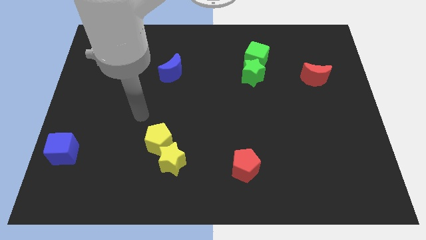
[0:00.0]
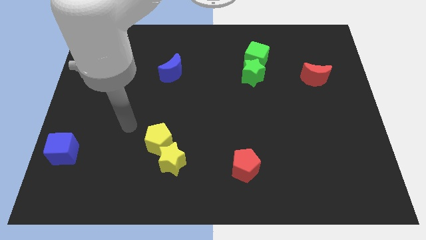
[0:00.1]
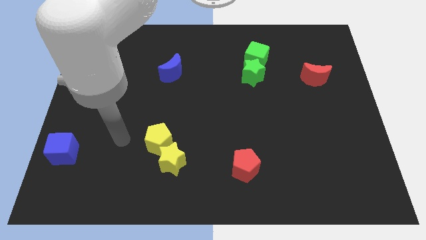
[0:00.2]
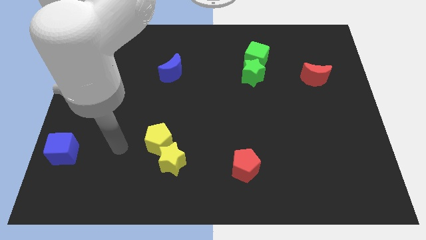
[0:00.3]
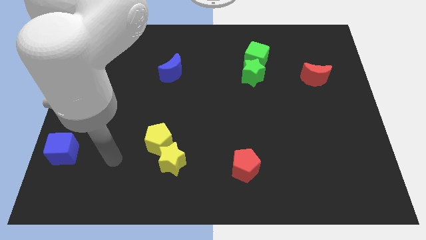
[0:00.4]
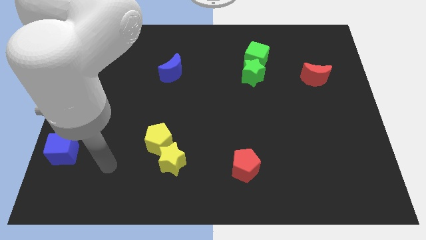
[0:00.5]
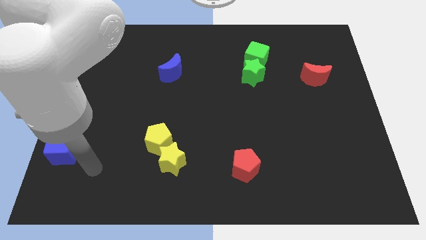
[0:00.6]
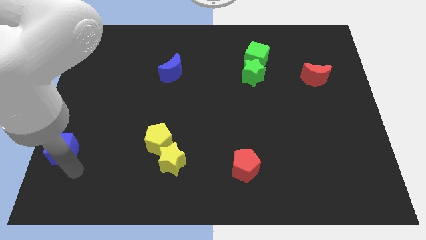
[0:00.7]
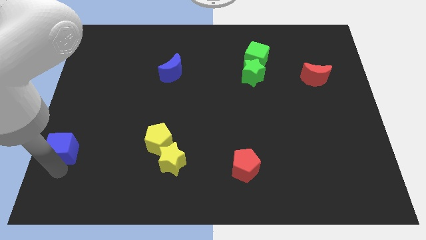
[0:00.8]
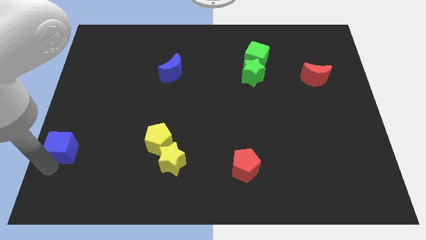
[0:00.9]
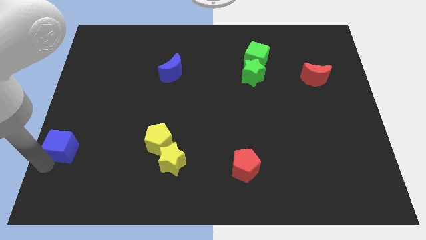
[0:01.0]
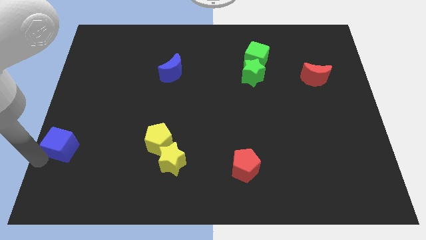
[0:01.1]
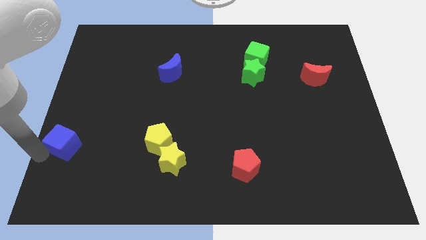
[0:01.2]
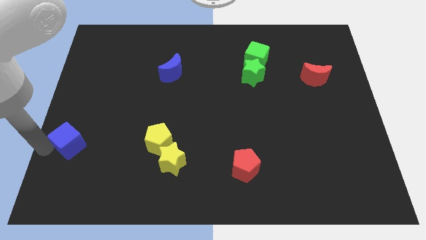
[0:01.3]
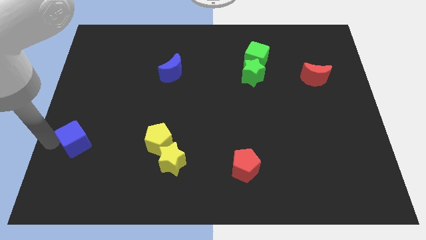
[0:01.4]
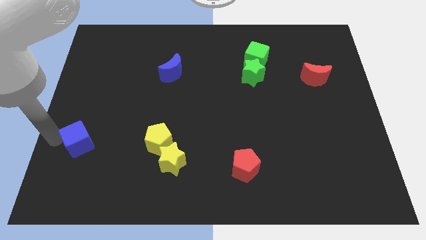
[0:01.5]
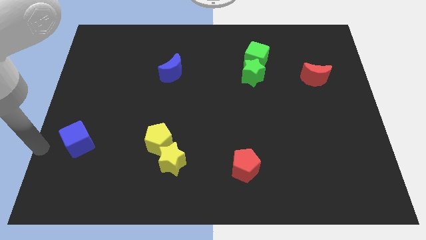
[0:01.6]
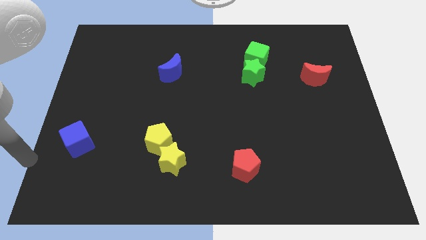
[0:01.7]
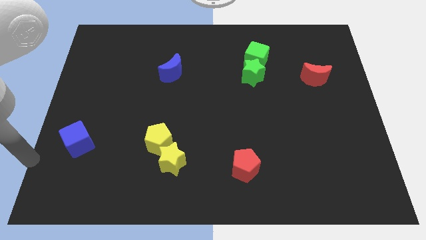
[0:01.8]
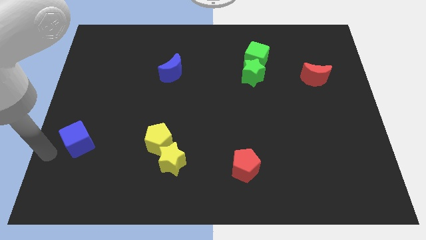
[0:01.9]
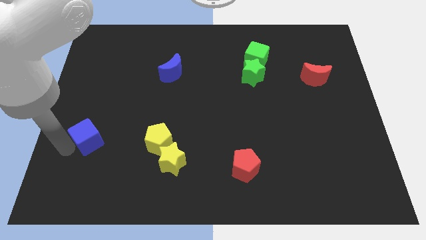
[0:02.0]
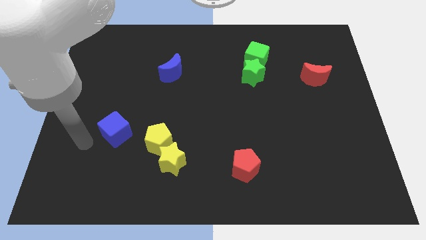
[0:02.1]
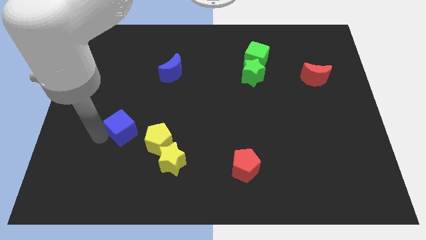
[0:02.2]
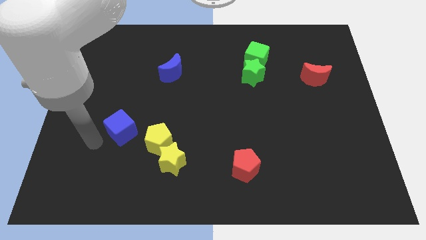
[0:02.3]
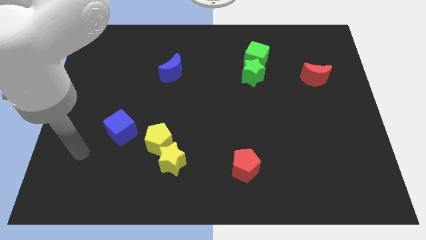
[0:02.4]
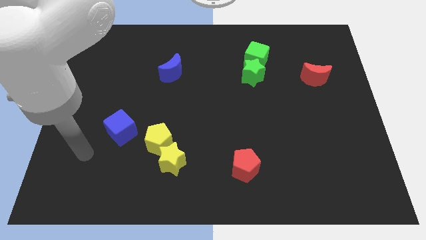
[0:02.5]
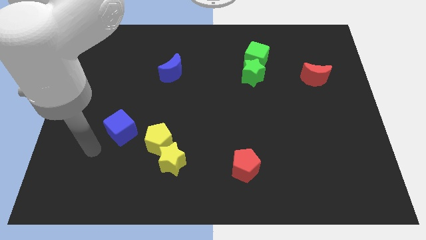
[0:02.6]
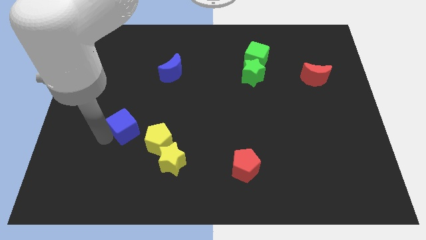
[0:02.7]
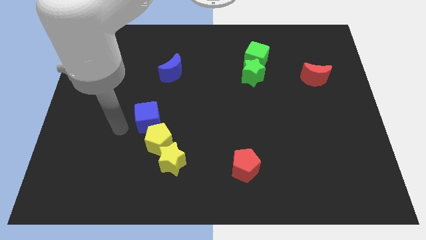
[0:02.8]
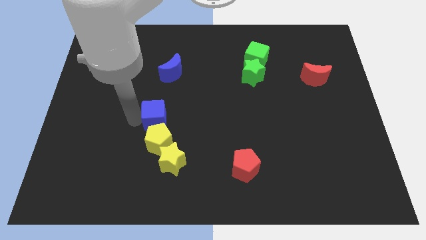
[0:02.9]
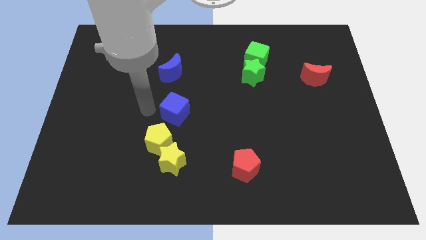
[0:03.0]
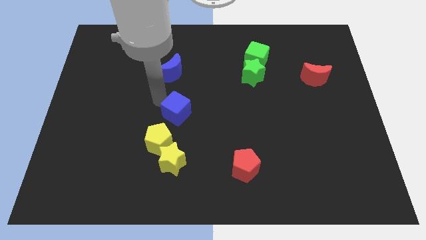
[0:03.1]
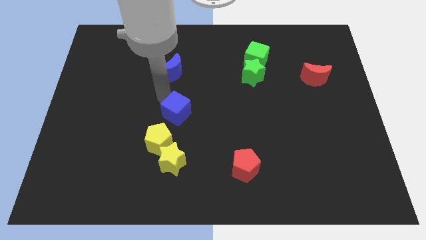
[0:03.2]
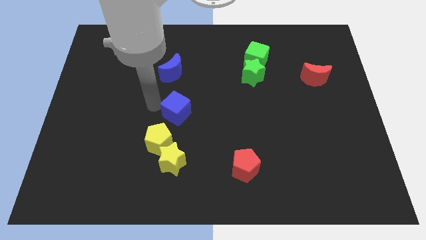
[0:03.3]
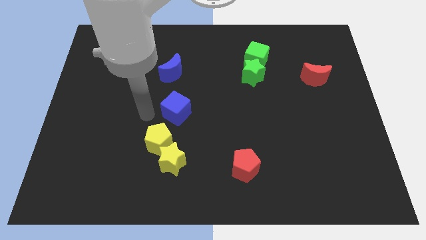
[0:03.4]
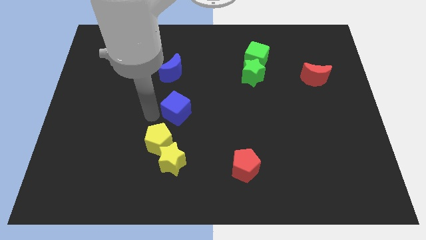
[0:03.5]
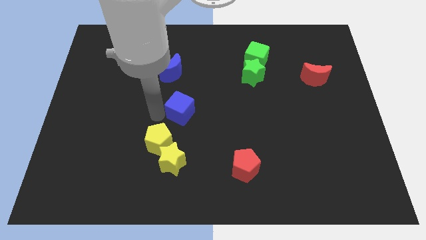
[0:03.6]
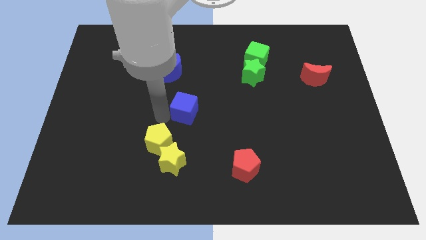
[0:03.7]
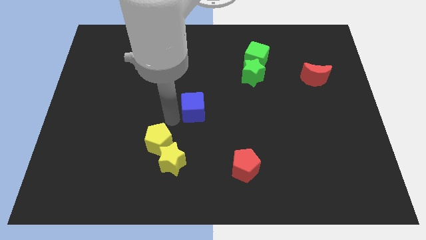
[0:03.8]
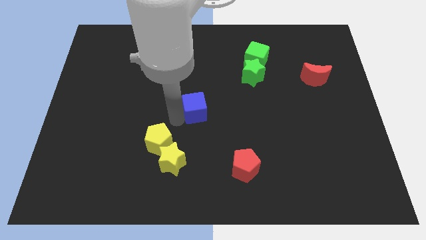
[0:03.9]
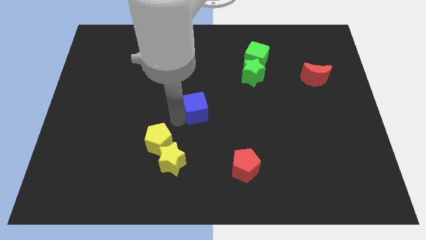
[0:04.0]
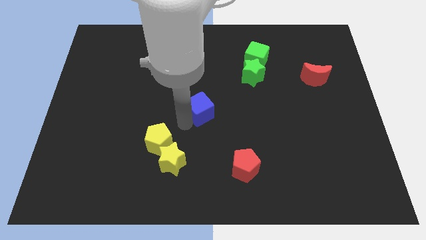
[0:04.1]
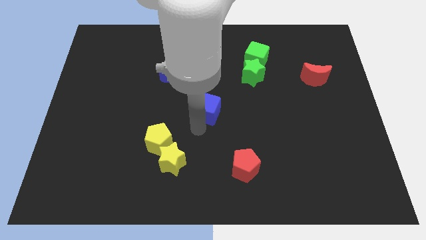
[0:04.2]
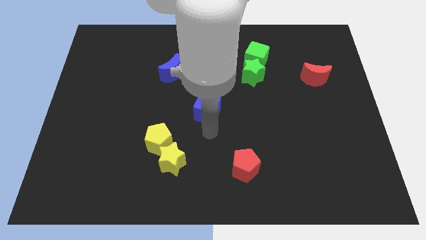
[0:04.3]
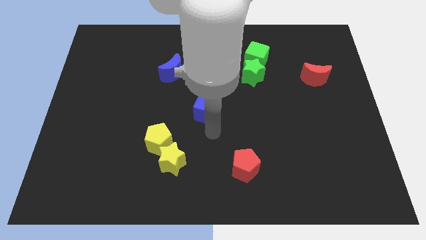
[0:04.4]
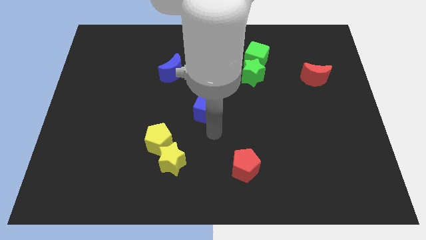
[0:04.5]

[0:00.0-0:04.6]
place the blue cube at the center of the board

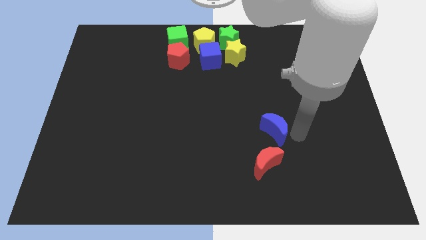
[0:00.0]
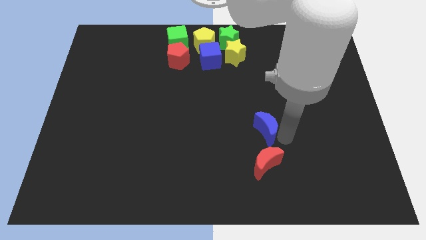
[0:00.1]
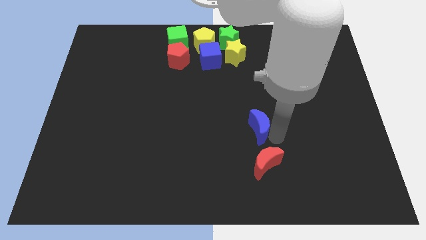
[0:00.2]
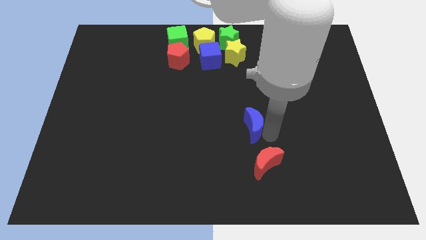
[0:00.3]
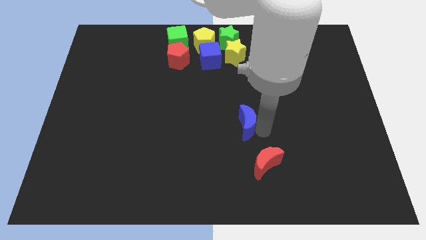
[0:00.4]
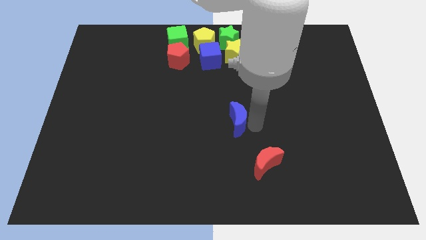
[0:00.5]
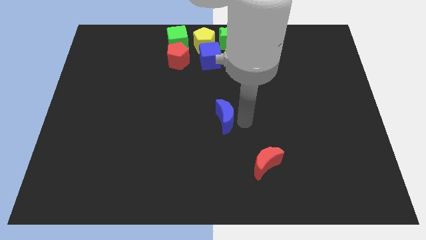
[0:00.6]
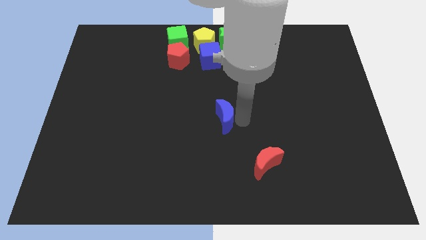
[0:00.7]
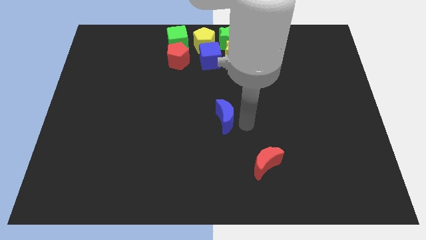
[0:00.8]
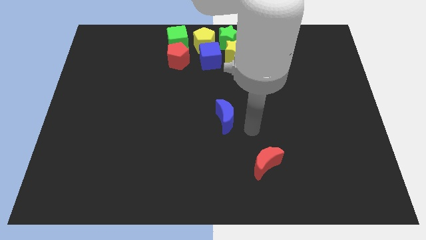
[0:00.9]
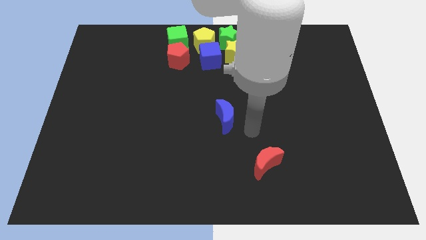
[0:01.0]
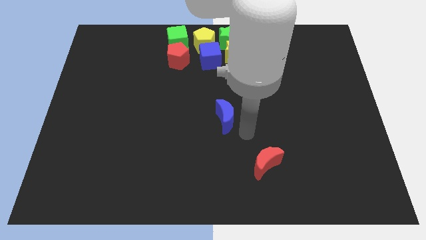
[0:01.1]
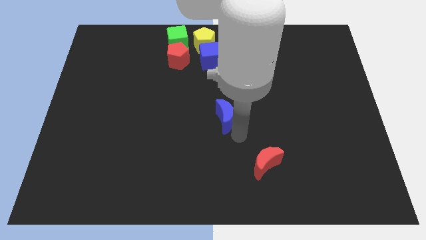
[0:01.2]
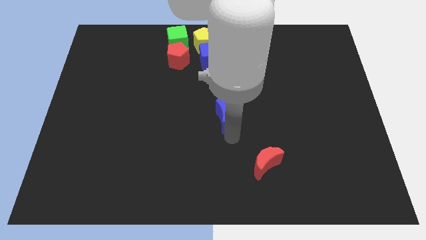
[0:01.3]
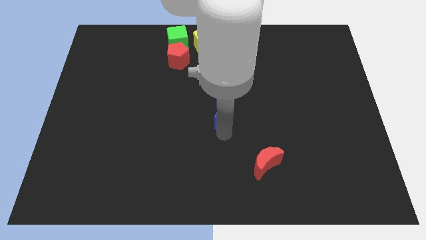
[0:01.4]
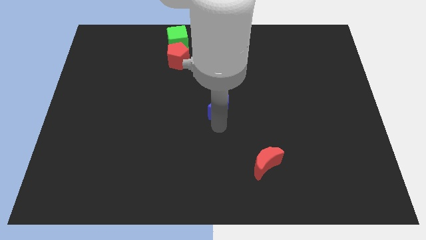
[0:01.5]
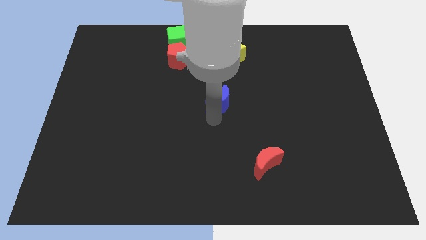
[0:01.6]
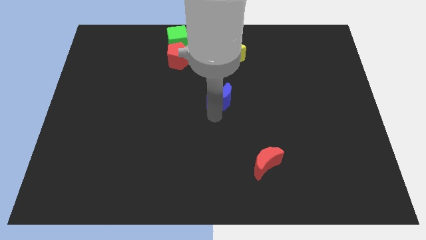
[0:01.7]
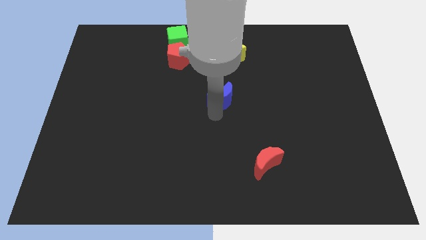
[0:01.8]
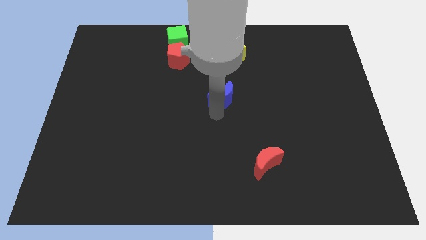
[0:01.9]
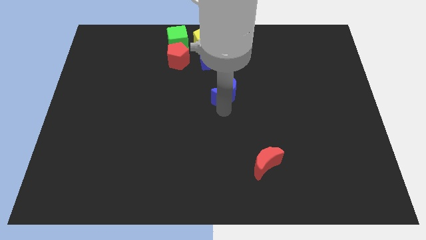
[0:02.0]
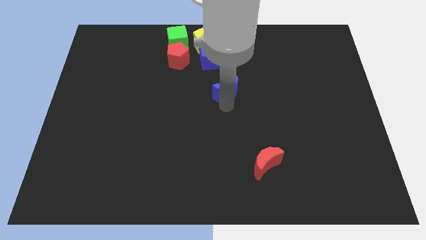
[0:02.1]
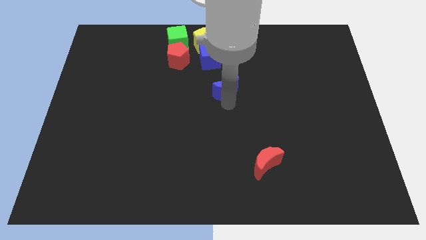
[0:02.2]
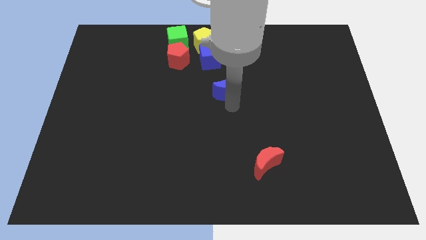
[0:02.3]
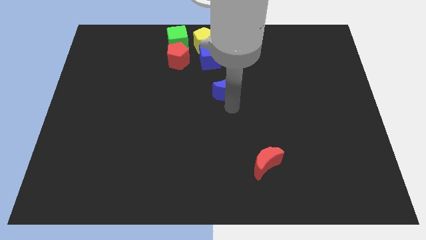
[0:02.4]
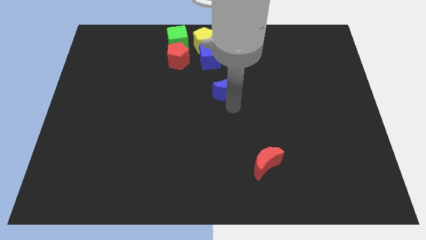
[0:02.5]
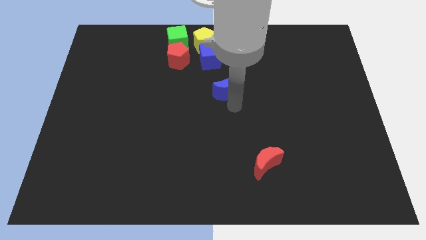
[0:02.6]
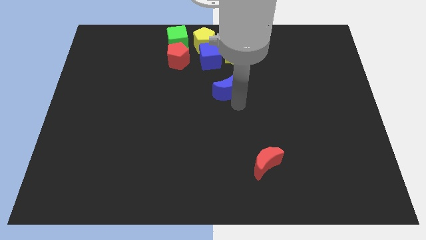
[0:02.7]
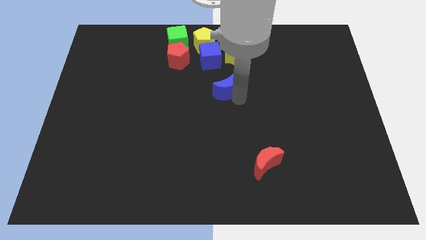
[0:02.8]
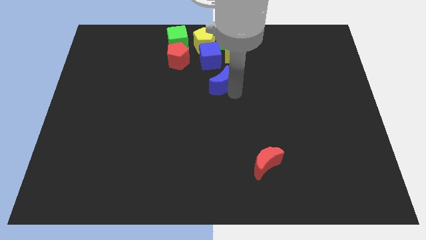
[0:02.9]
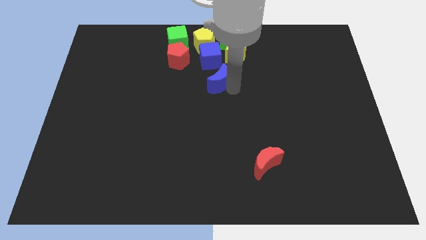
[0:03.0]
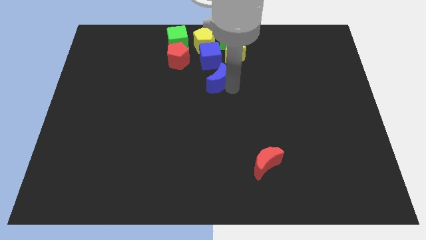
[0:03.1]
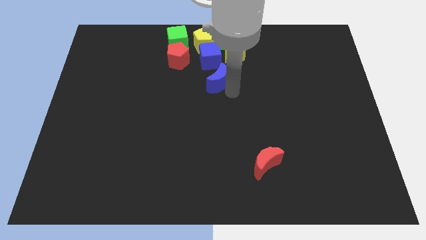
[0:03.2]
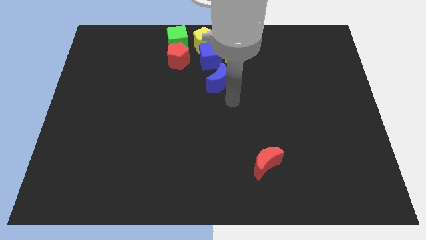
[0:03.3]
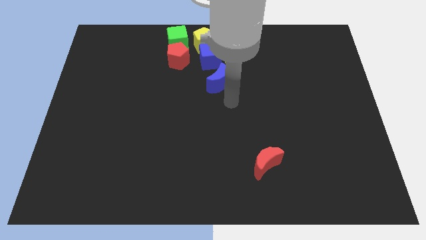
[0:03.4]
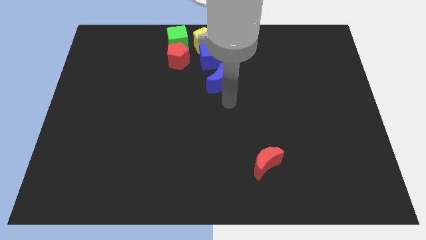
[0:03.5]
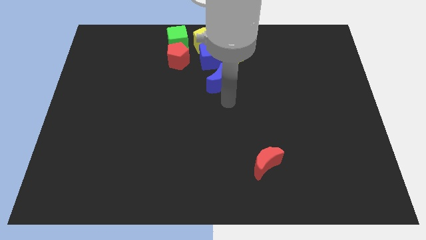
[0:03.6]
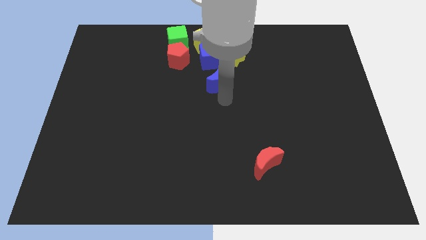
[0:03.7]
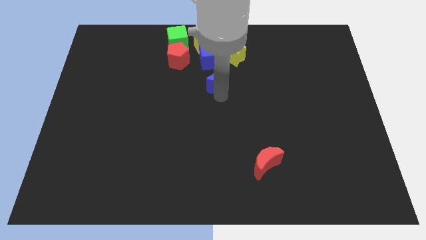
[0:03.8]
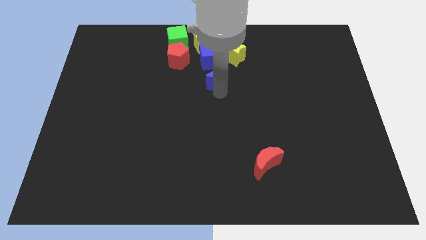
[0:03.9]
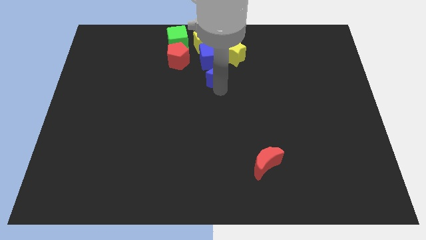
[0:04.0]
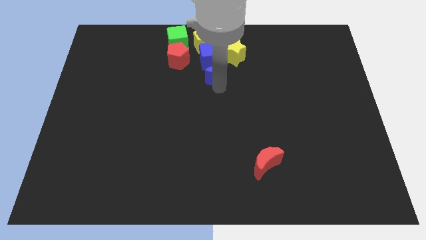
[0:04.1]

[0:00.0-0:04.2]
place the blue moon to the bottom right side of the blue cube
